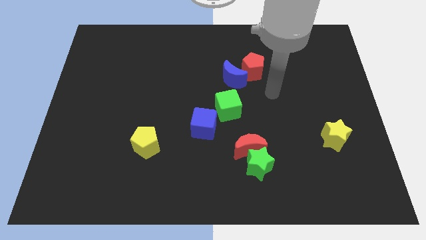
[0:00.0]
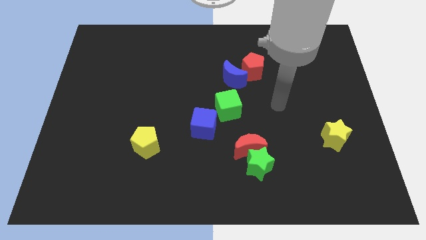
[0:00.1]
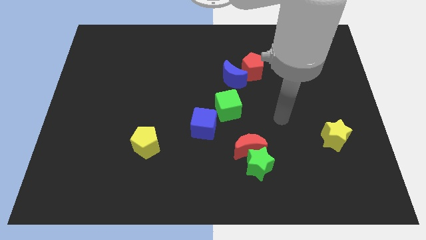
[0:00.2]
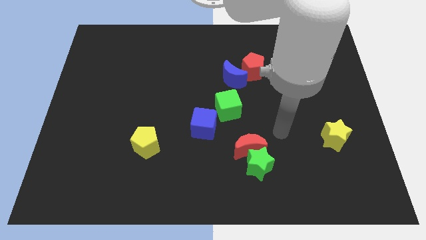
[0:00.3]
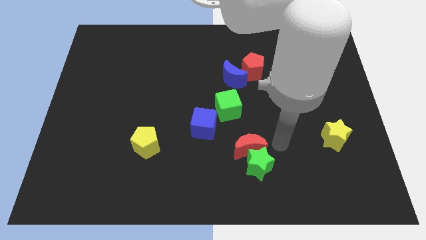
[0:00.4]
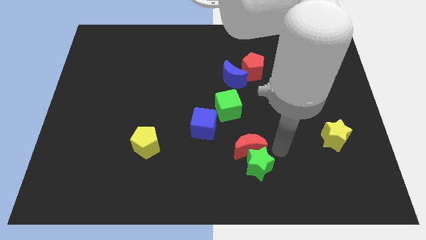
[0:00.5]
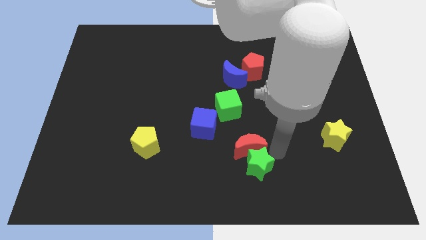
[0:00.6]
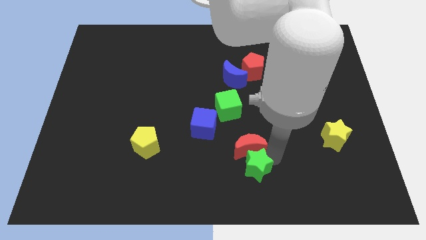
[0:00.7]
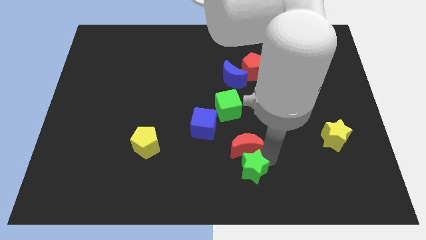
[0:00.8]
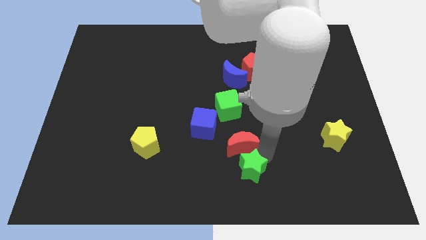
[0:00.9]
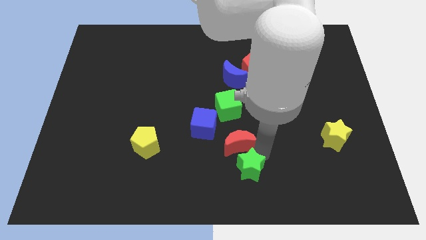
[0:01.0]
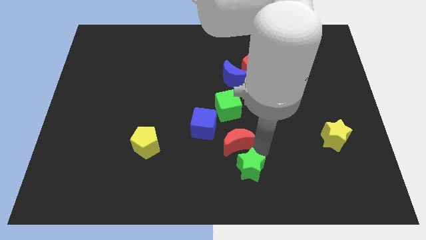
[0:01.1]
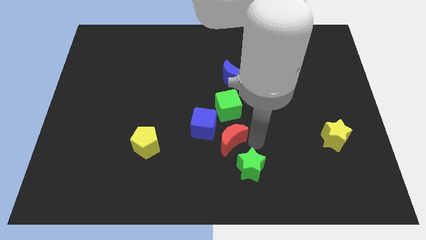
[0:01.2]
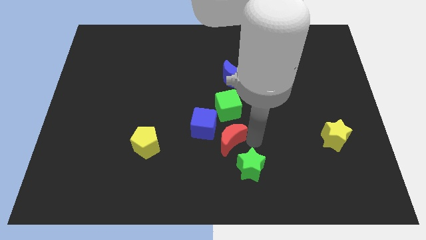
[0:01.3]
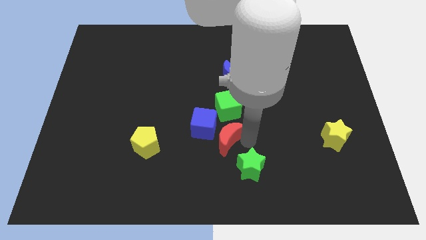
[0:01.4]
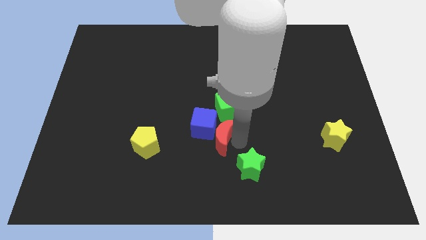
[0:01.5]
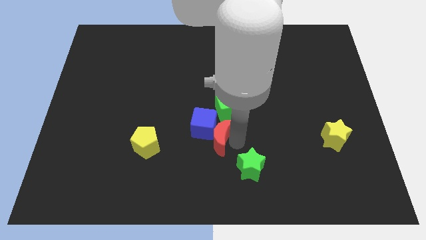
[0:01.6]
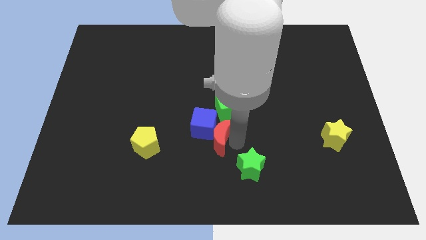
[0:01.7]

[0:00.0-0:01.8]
separate the red moon from the green star

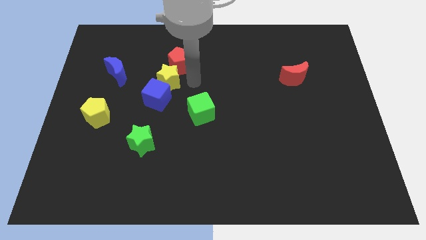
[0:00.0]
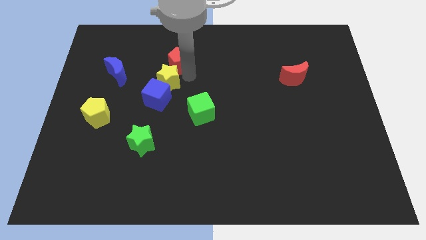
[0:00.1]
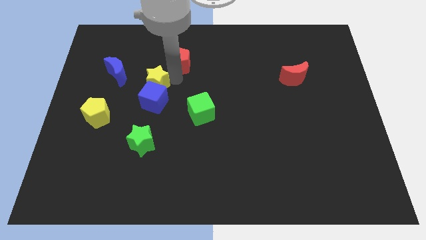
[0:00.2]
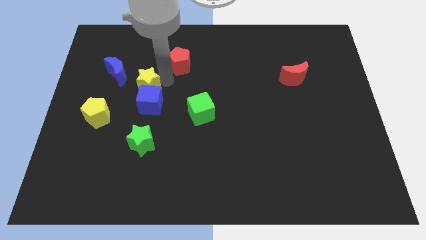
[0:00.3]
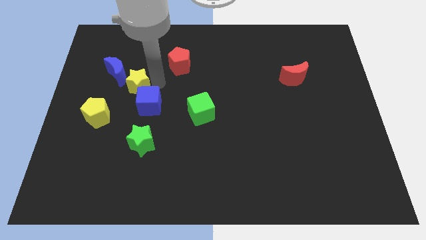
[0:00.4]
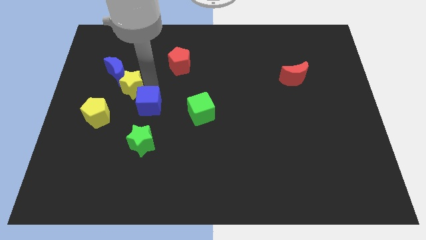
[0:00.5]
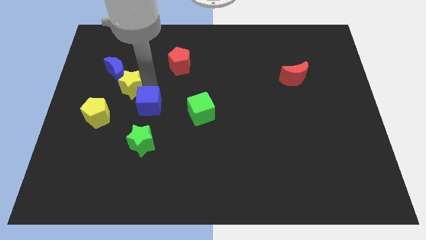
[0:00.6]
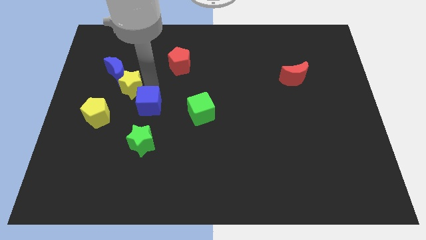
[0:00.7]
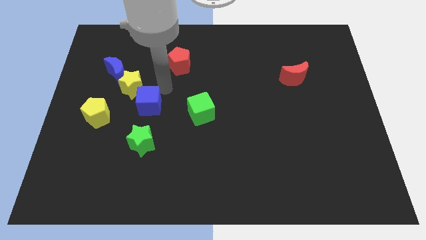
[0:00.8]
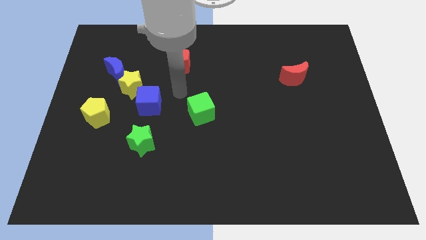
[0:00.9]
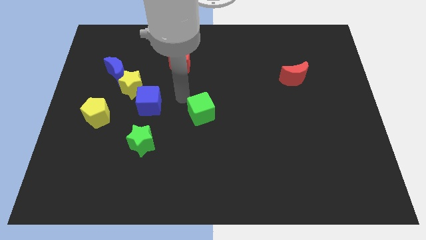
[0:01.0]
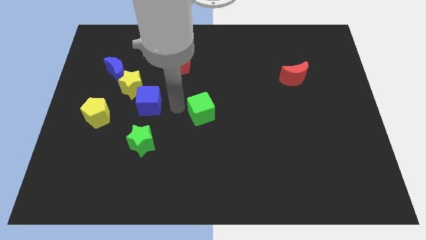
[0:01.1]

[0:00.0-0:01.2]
place a yellow star to the bottom right of blue moon

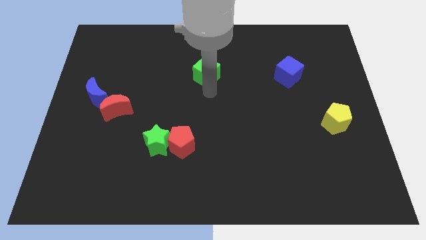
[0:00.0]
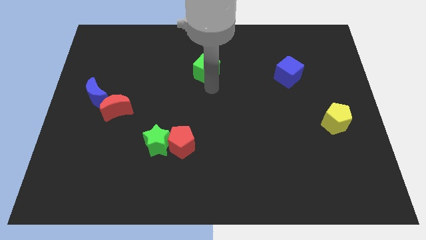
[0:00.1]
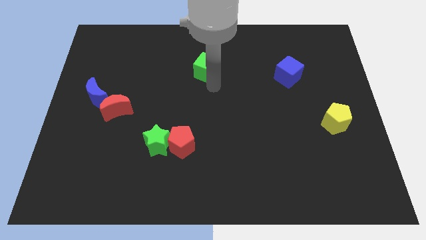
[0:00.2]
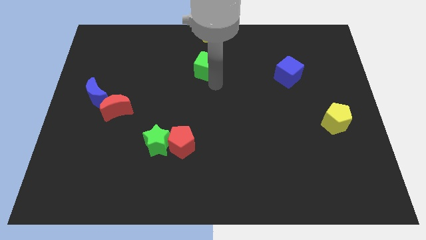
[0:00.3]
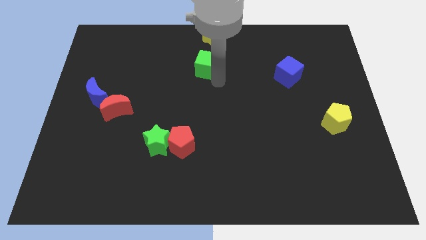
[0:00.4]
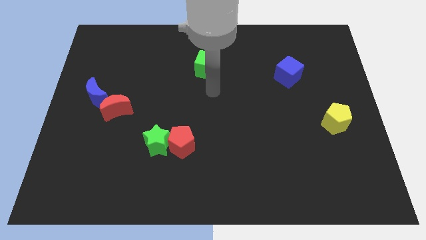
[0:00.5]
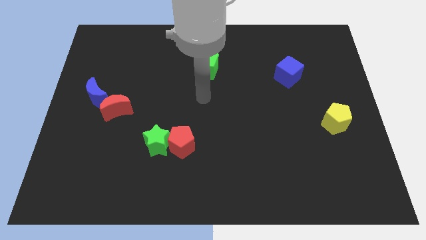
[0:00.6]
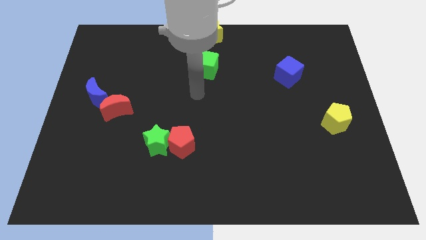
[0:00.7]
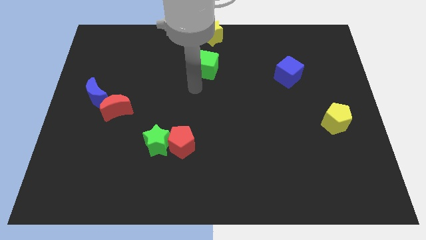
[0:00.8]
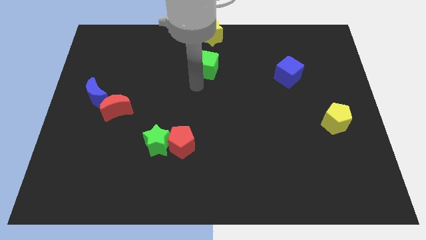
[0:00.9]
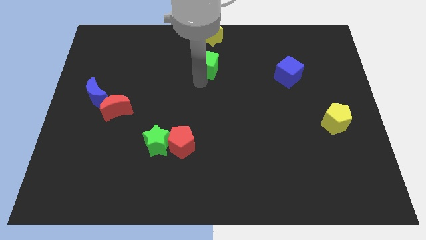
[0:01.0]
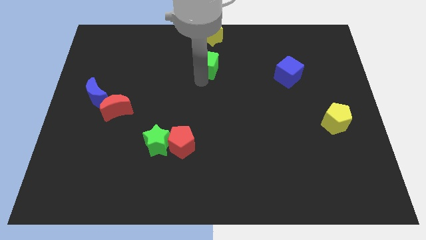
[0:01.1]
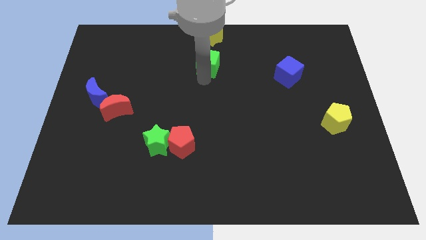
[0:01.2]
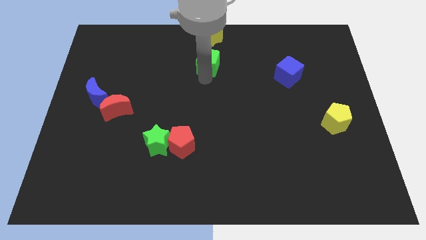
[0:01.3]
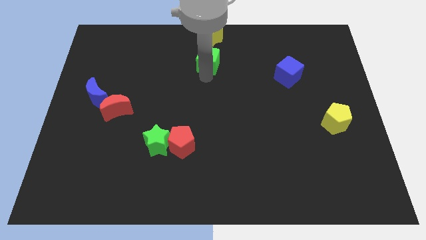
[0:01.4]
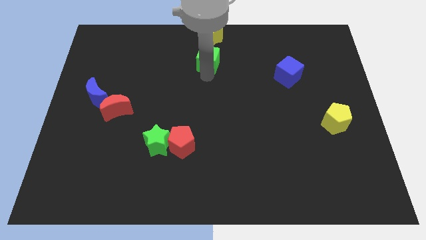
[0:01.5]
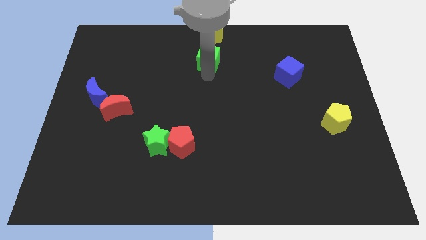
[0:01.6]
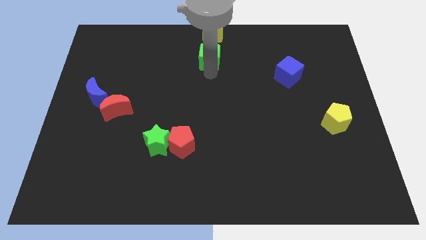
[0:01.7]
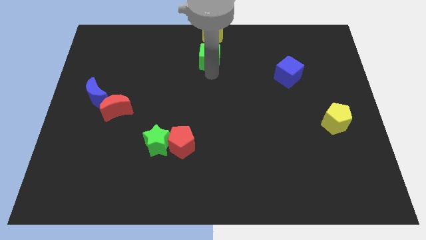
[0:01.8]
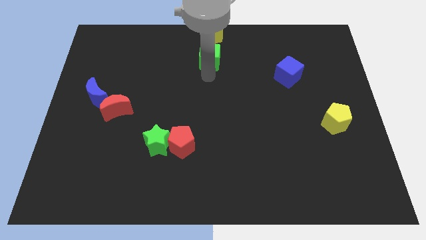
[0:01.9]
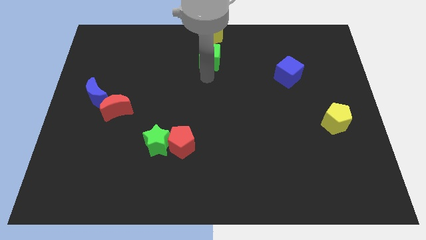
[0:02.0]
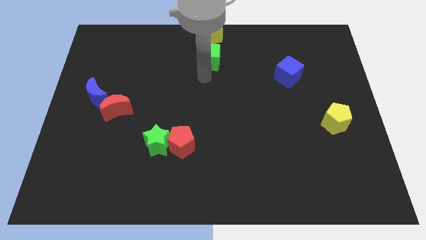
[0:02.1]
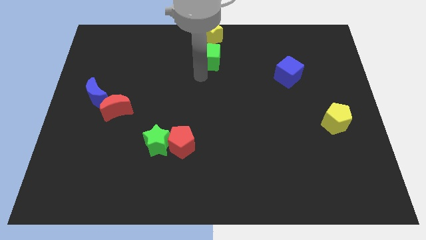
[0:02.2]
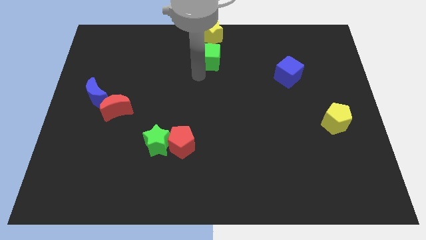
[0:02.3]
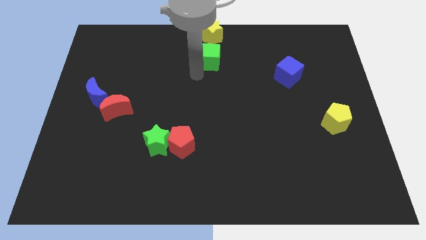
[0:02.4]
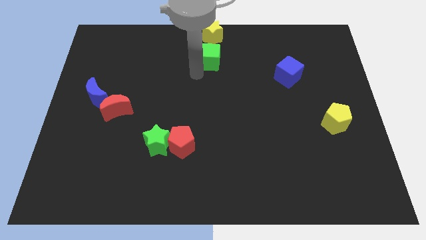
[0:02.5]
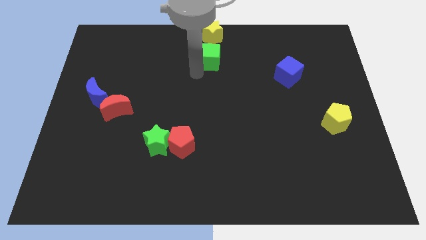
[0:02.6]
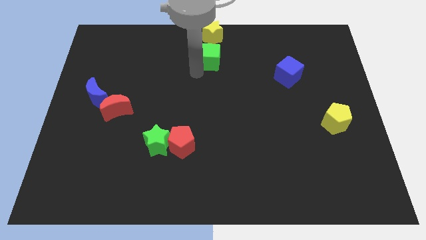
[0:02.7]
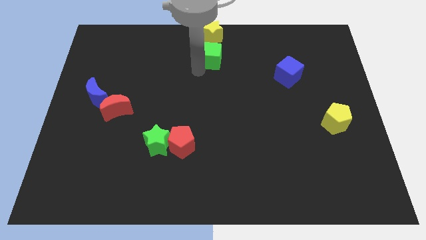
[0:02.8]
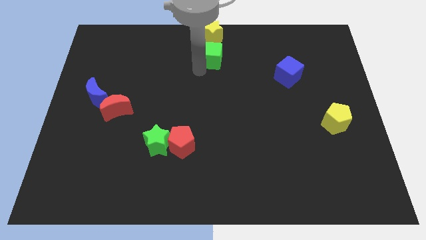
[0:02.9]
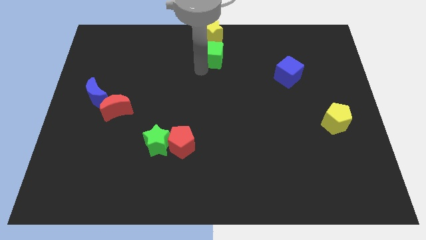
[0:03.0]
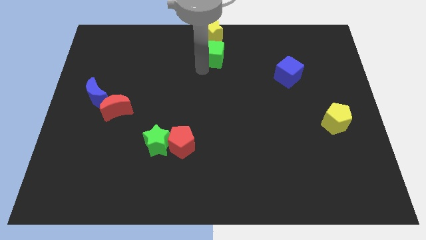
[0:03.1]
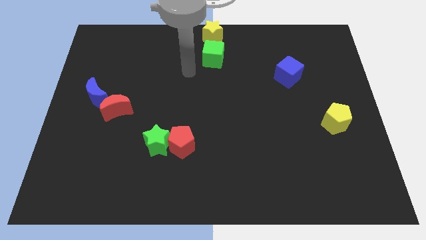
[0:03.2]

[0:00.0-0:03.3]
push green cube to below yellow star

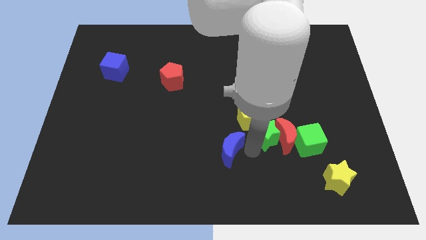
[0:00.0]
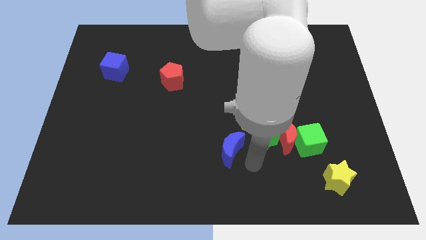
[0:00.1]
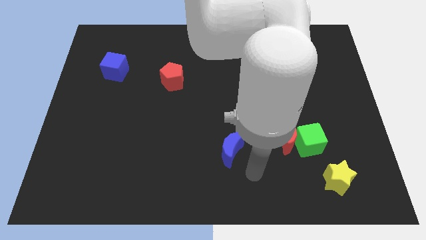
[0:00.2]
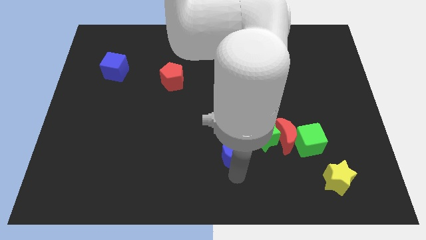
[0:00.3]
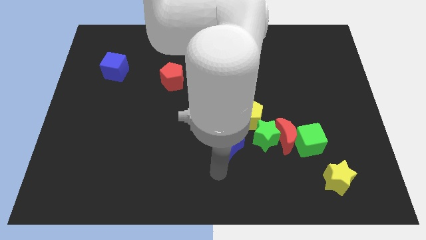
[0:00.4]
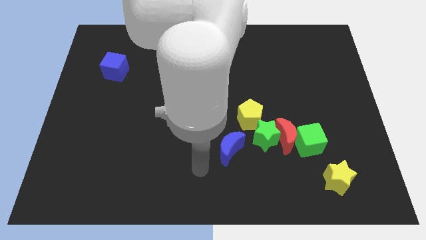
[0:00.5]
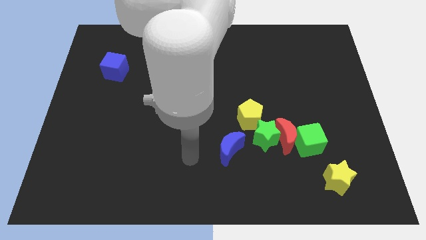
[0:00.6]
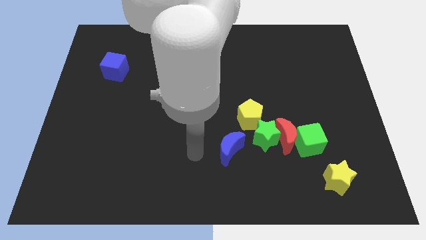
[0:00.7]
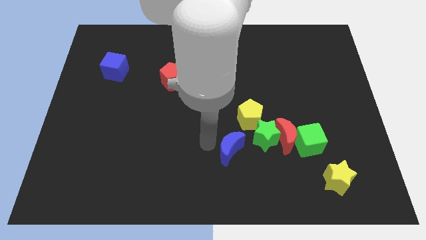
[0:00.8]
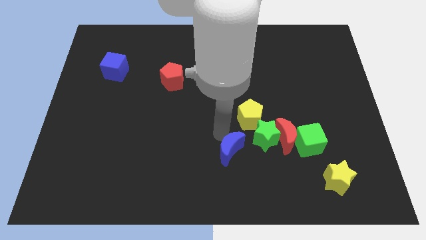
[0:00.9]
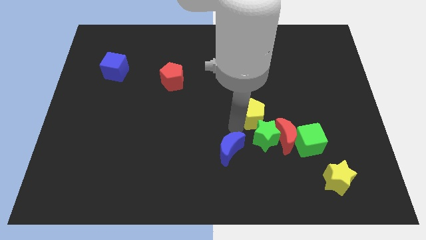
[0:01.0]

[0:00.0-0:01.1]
move your arm towards the yellow pentagon

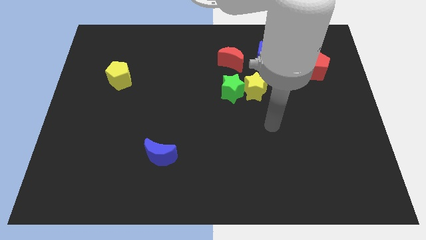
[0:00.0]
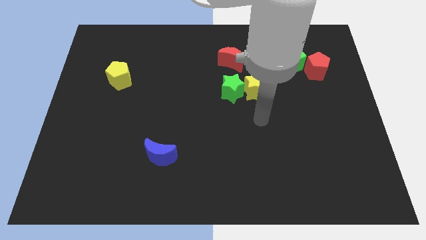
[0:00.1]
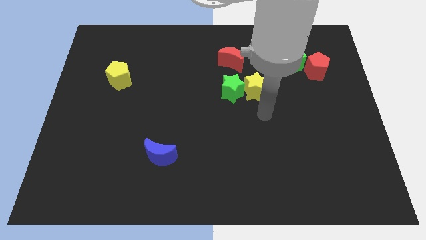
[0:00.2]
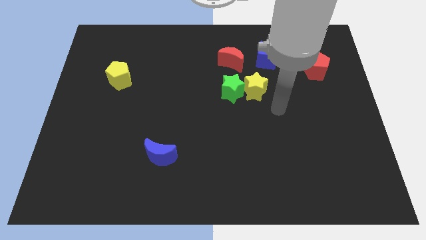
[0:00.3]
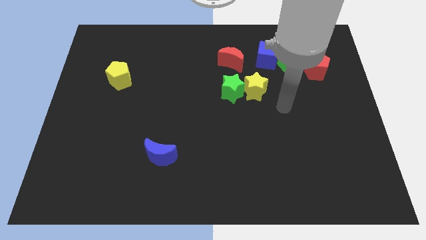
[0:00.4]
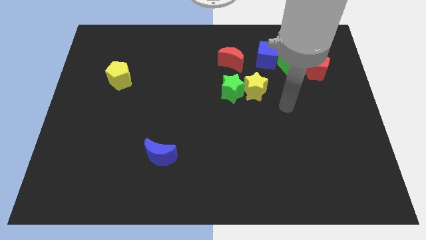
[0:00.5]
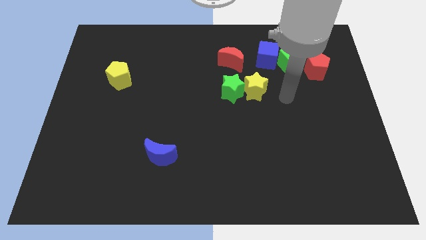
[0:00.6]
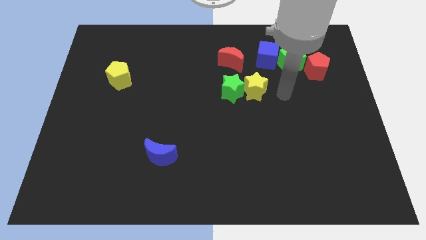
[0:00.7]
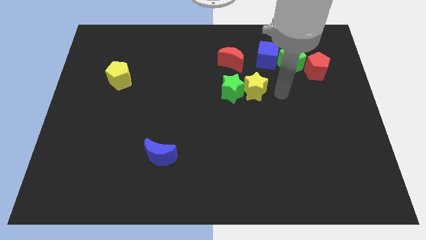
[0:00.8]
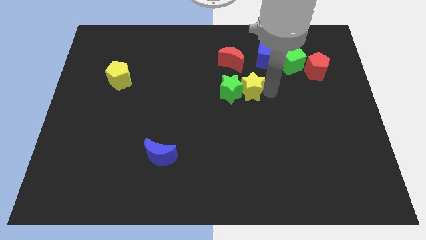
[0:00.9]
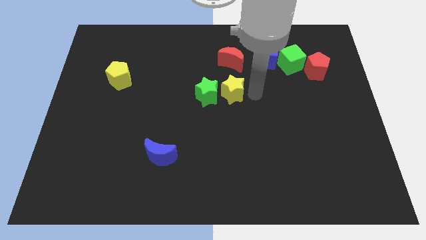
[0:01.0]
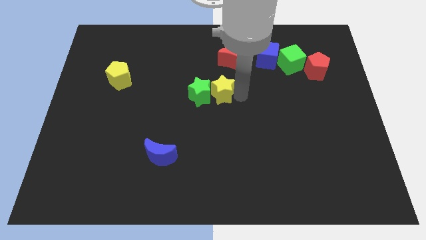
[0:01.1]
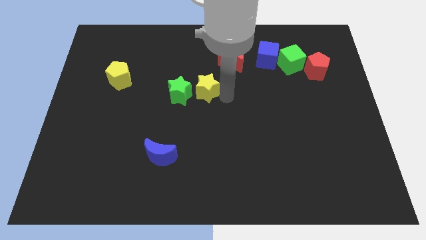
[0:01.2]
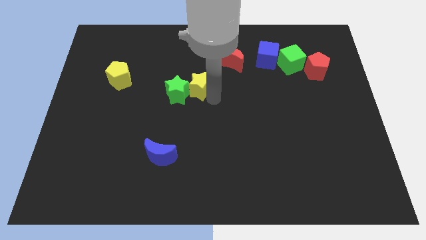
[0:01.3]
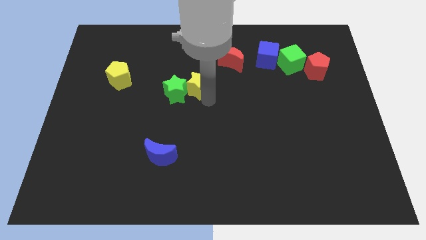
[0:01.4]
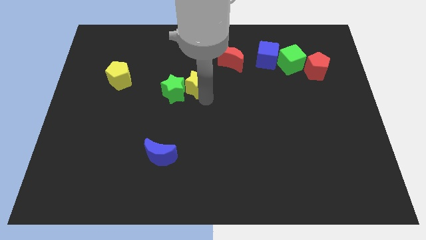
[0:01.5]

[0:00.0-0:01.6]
slightly push the green star with the yellow star towards the left center of the board
